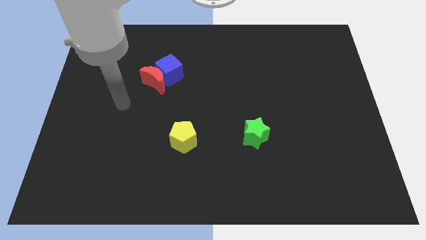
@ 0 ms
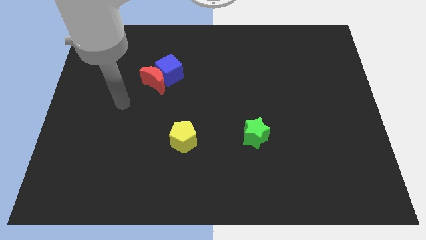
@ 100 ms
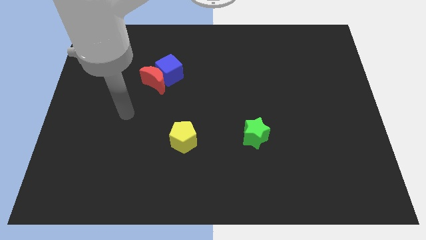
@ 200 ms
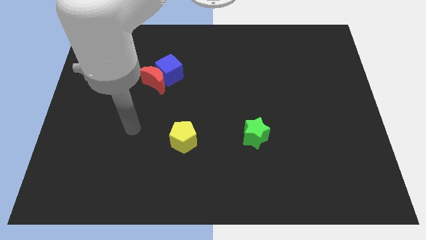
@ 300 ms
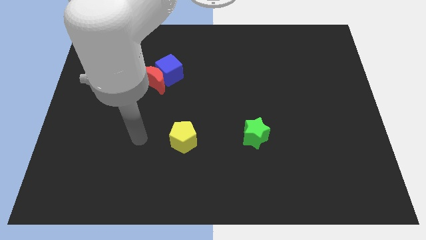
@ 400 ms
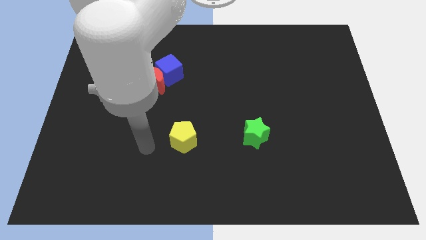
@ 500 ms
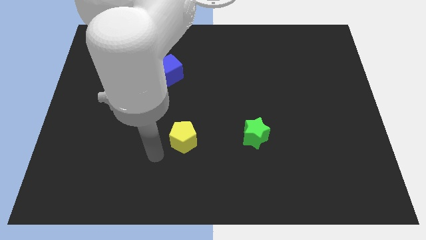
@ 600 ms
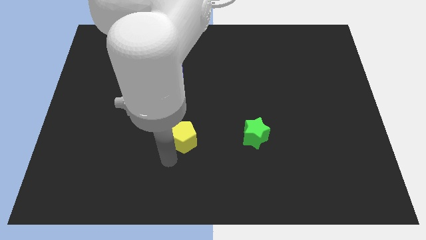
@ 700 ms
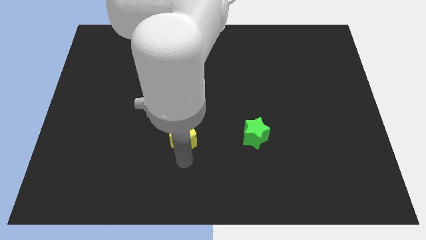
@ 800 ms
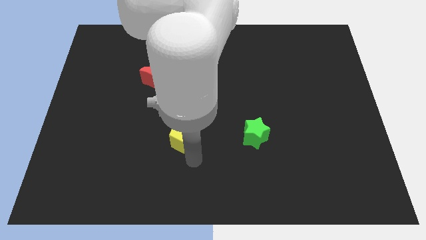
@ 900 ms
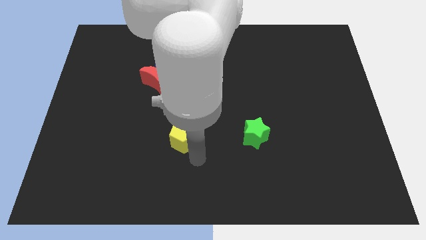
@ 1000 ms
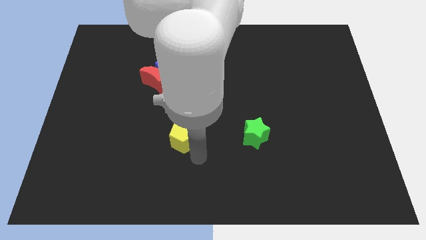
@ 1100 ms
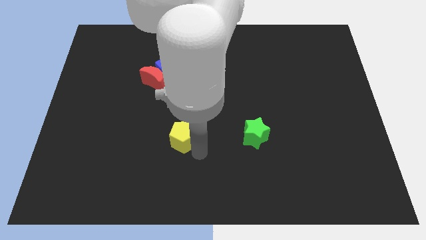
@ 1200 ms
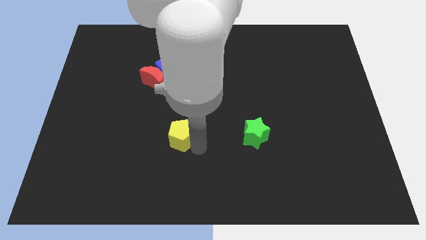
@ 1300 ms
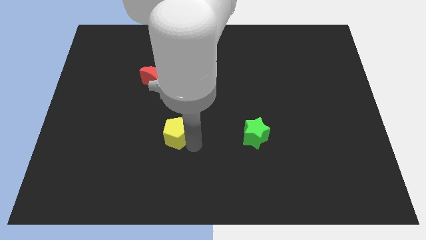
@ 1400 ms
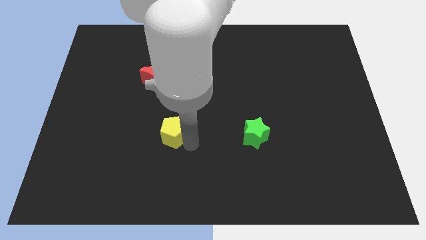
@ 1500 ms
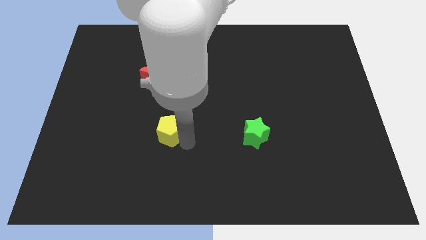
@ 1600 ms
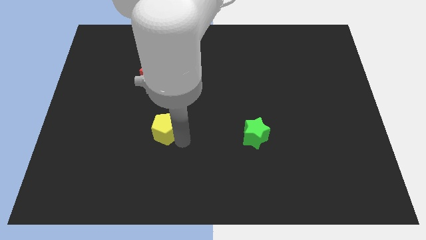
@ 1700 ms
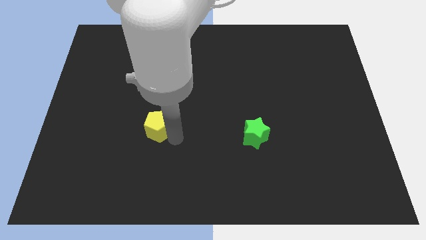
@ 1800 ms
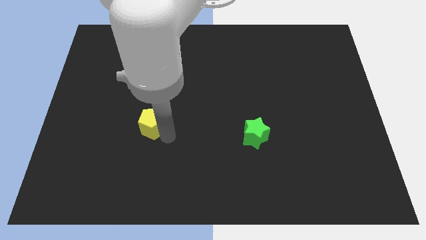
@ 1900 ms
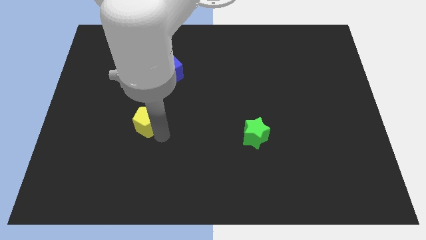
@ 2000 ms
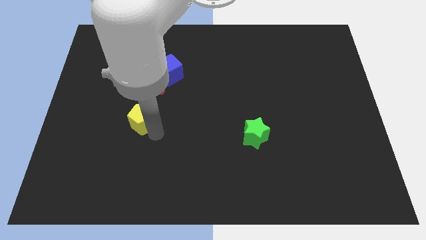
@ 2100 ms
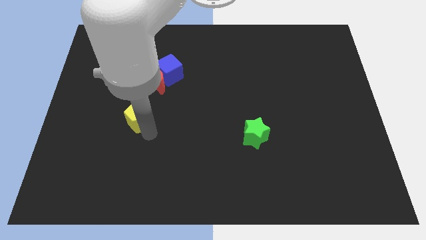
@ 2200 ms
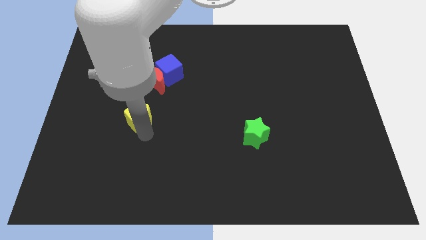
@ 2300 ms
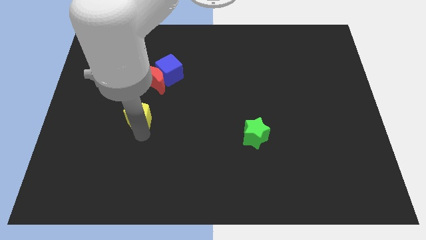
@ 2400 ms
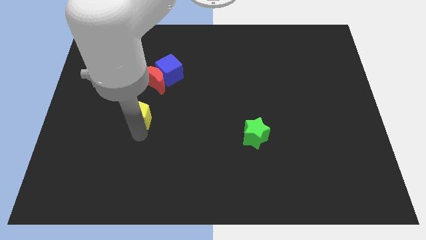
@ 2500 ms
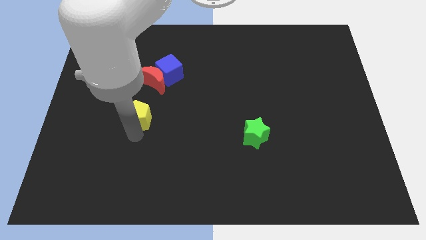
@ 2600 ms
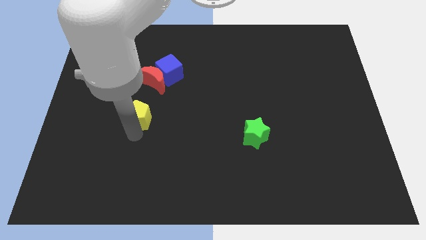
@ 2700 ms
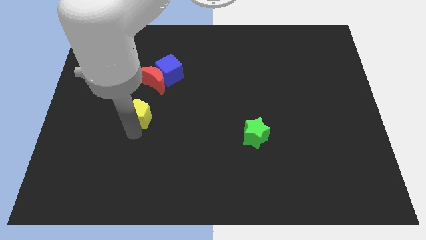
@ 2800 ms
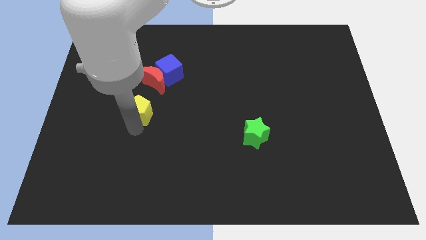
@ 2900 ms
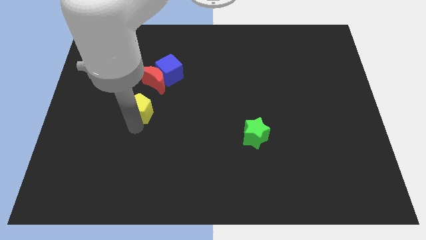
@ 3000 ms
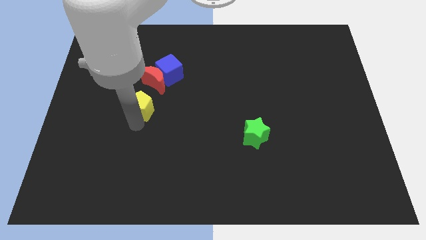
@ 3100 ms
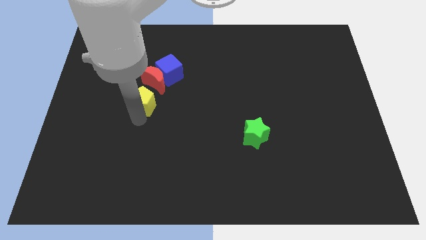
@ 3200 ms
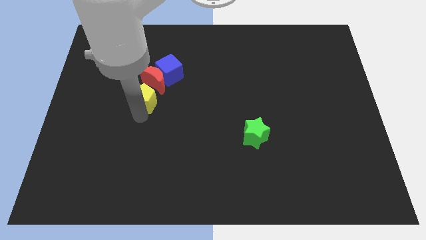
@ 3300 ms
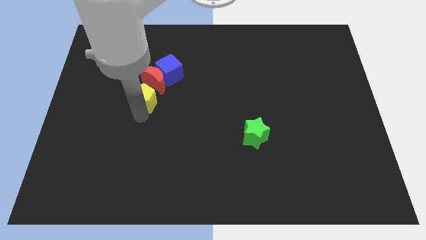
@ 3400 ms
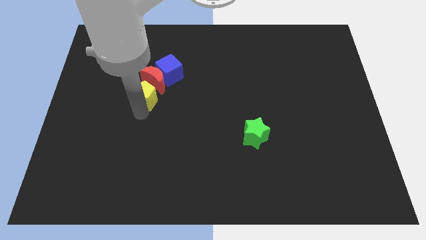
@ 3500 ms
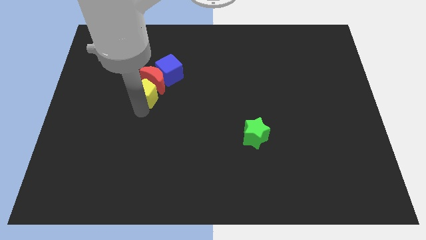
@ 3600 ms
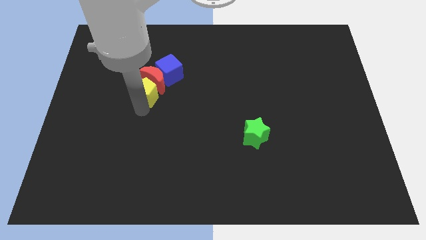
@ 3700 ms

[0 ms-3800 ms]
put the pentagon to the red block

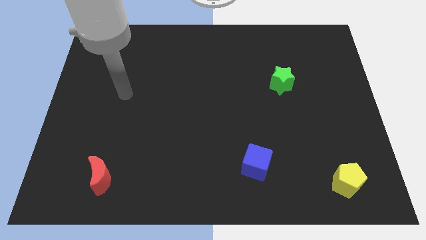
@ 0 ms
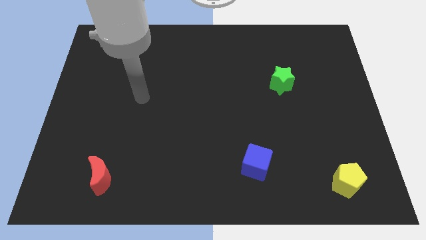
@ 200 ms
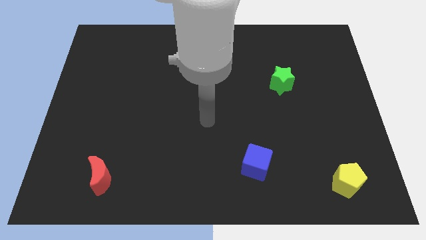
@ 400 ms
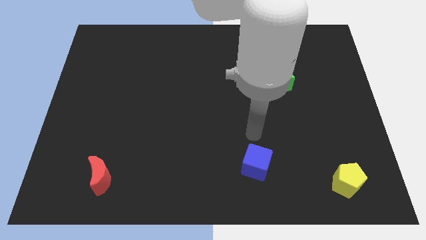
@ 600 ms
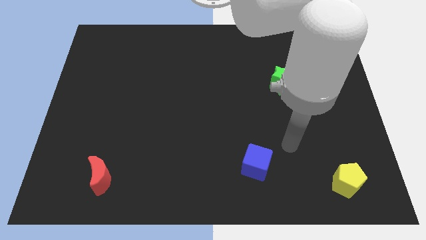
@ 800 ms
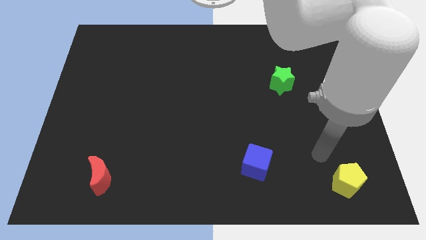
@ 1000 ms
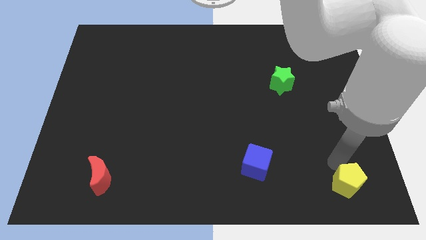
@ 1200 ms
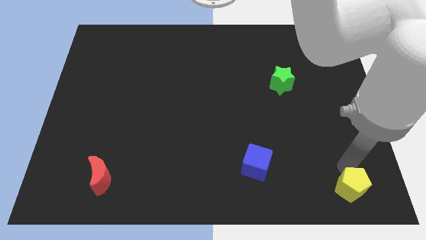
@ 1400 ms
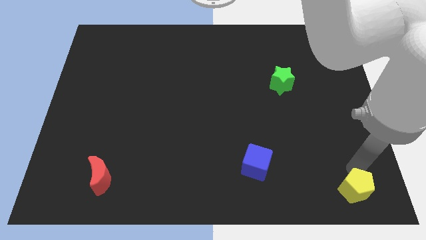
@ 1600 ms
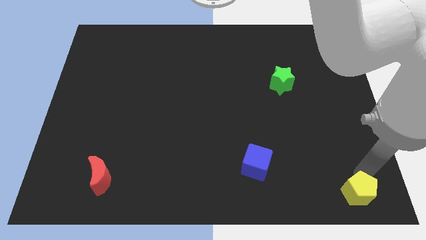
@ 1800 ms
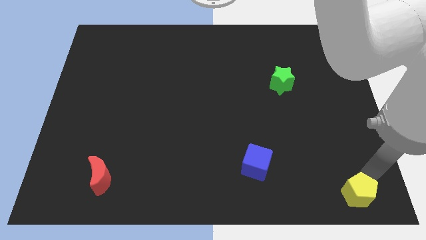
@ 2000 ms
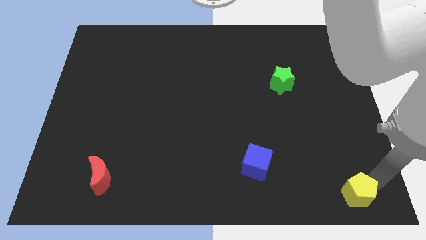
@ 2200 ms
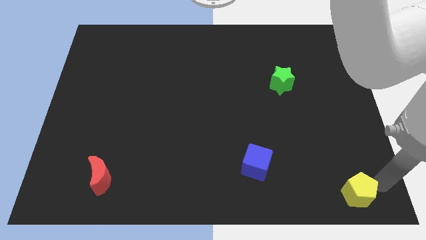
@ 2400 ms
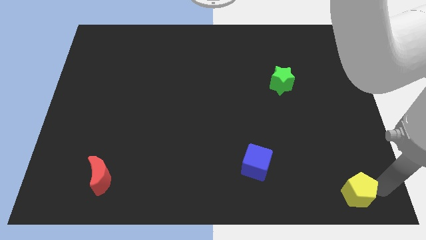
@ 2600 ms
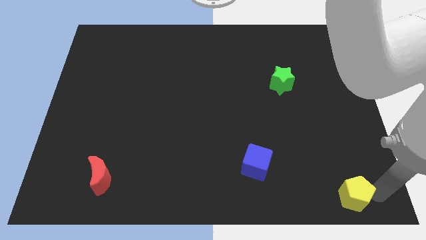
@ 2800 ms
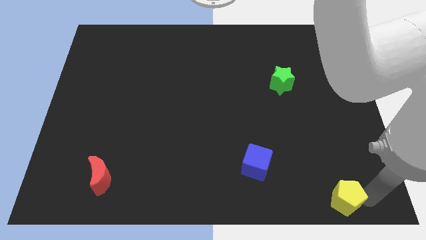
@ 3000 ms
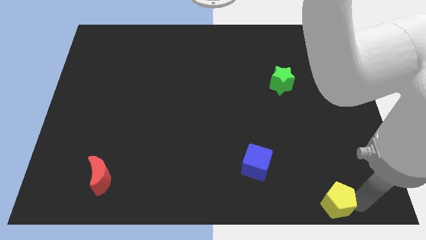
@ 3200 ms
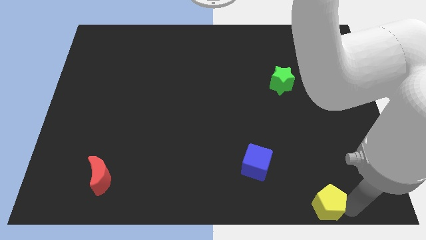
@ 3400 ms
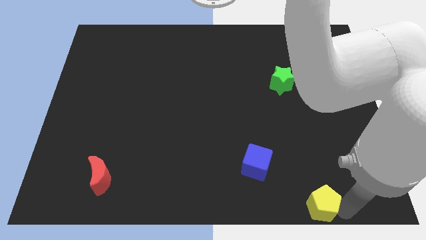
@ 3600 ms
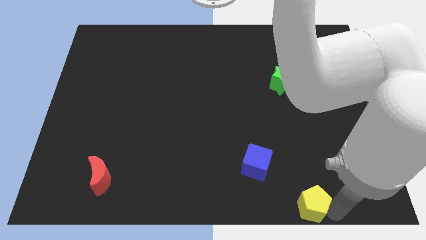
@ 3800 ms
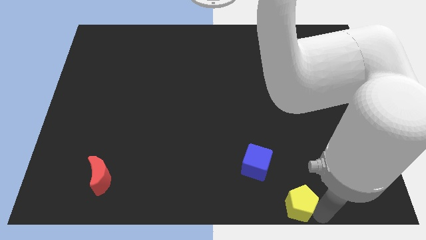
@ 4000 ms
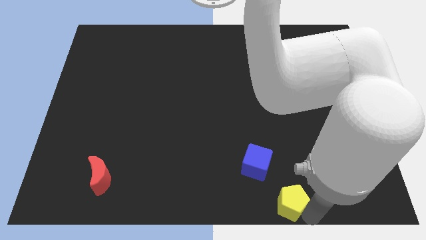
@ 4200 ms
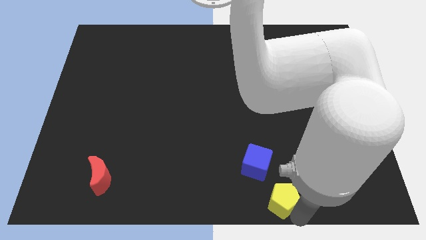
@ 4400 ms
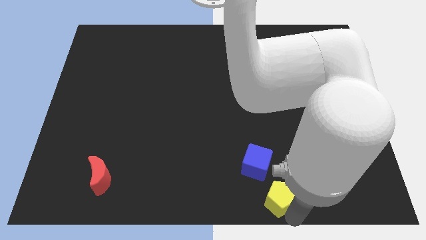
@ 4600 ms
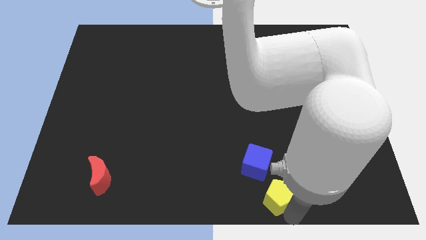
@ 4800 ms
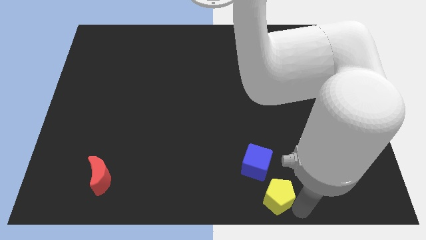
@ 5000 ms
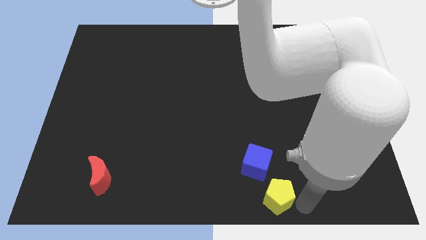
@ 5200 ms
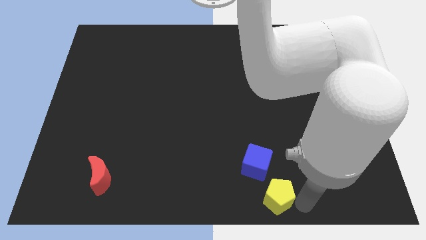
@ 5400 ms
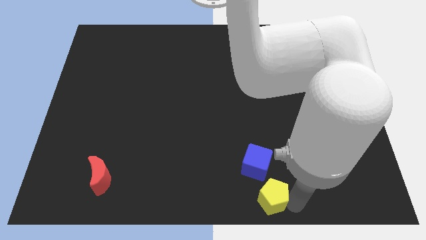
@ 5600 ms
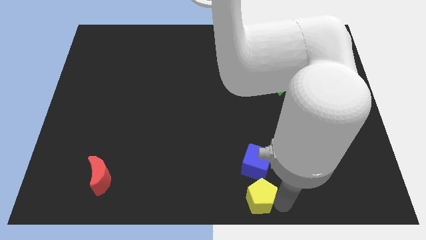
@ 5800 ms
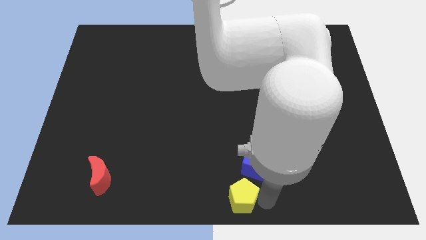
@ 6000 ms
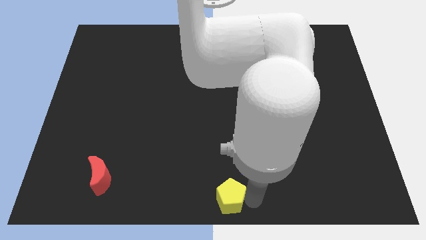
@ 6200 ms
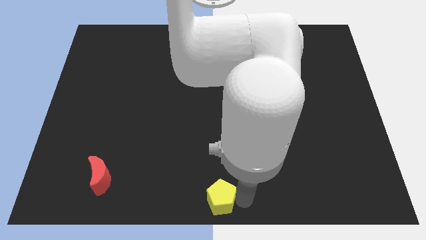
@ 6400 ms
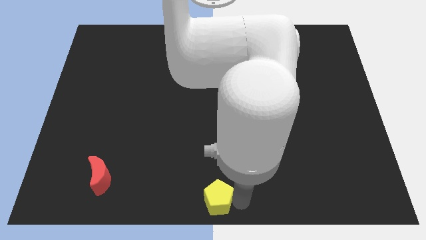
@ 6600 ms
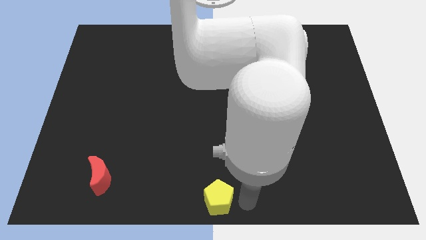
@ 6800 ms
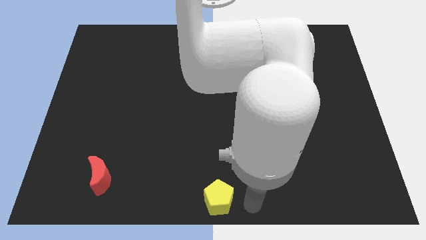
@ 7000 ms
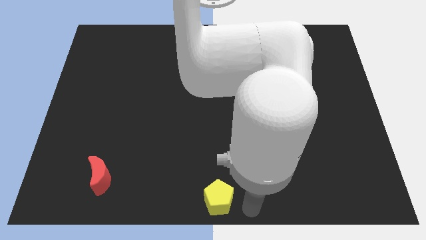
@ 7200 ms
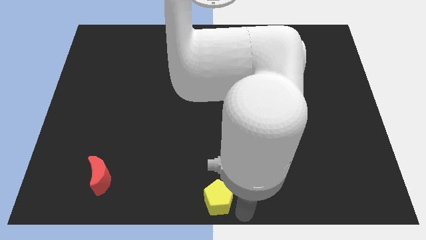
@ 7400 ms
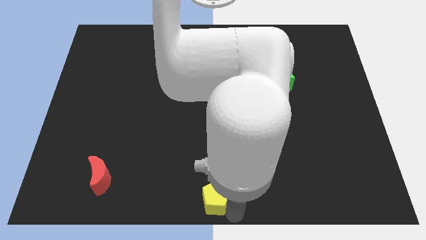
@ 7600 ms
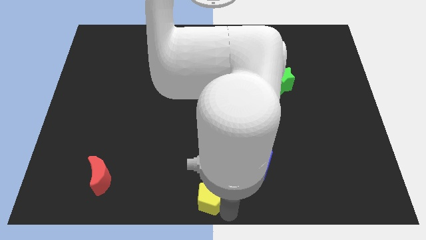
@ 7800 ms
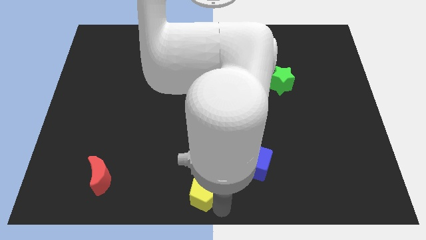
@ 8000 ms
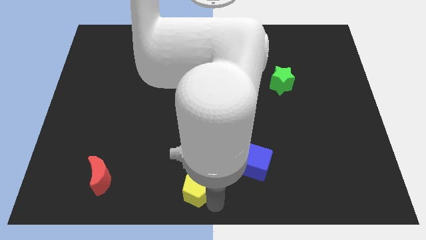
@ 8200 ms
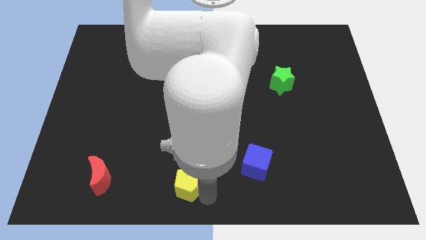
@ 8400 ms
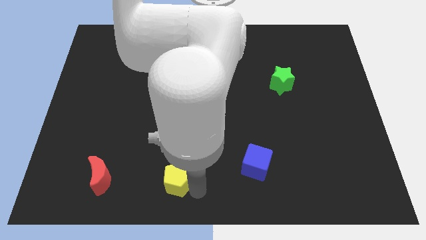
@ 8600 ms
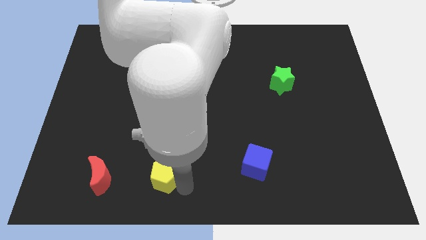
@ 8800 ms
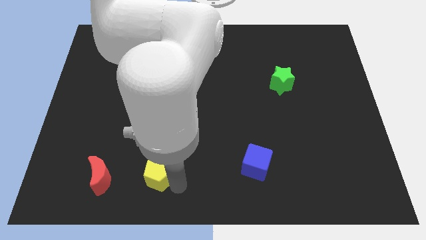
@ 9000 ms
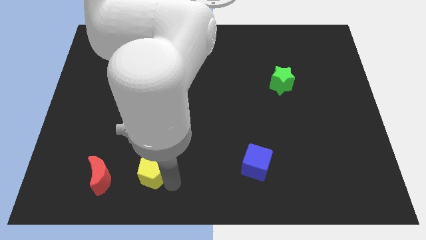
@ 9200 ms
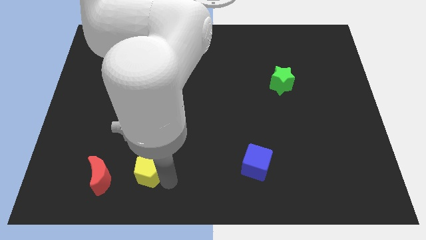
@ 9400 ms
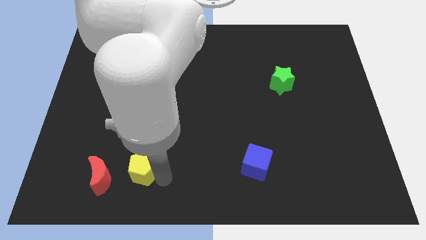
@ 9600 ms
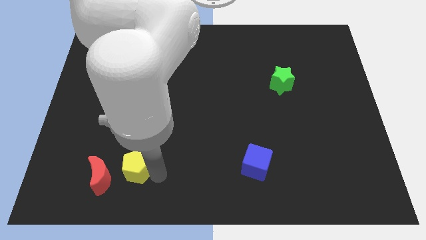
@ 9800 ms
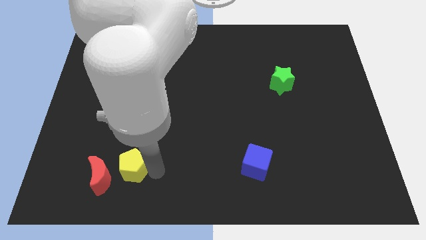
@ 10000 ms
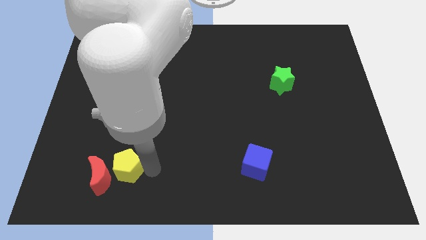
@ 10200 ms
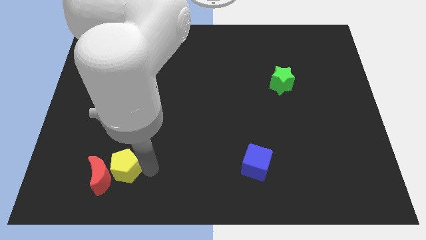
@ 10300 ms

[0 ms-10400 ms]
move the yellow block towards the red moon
